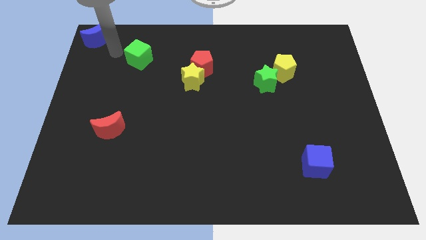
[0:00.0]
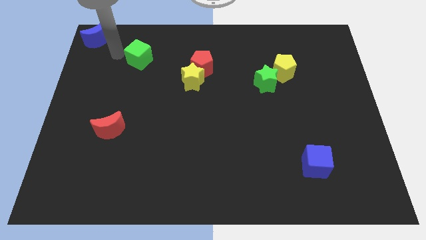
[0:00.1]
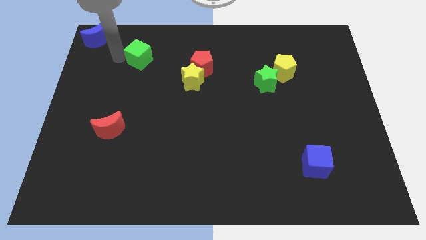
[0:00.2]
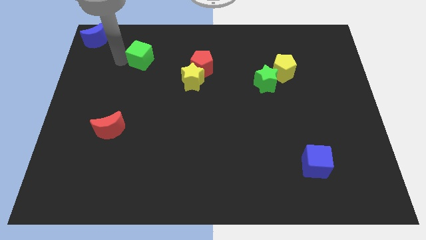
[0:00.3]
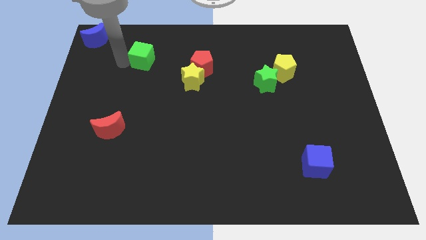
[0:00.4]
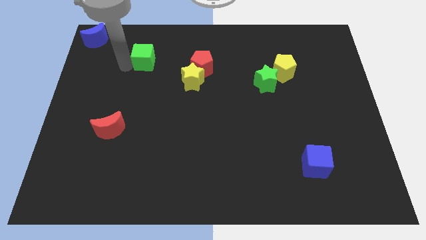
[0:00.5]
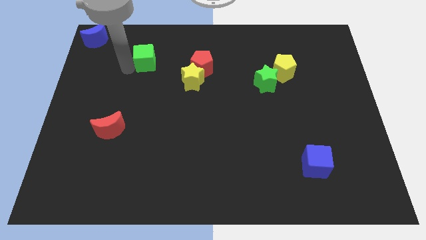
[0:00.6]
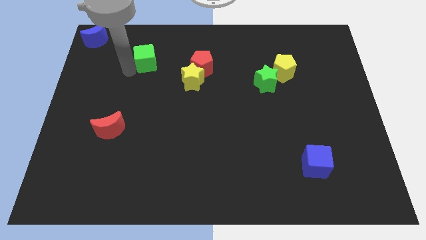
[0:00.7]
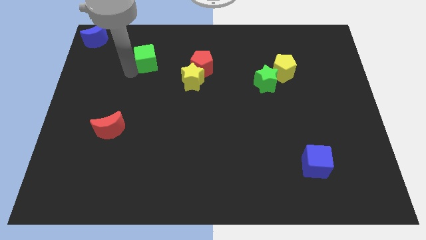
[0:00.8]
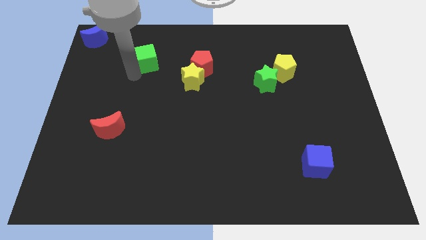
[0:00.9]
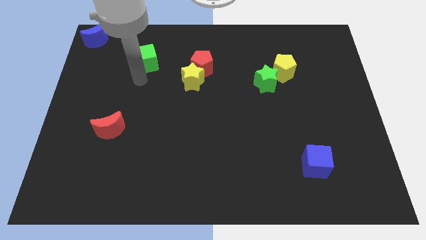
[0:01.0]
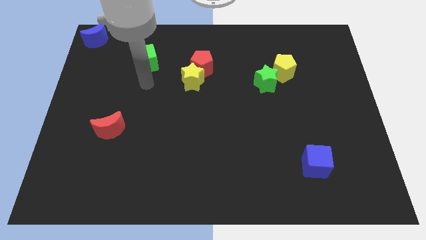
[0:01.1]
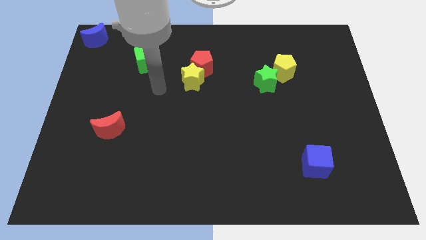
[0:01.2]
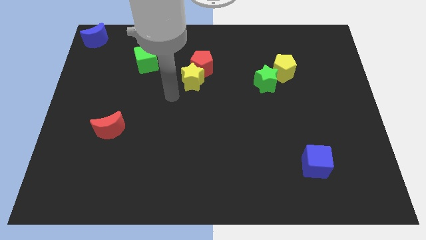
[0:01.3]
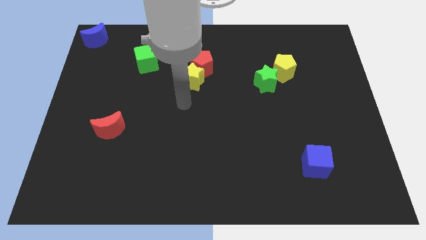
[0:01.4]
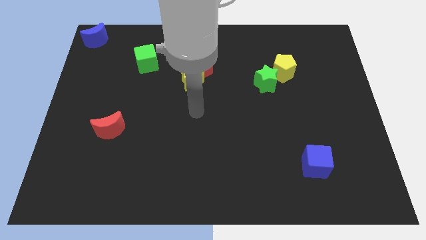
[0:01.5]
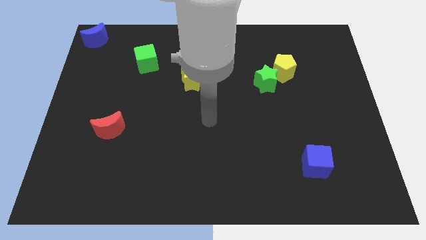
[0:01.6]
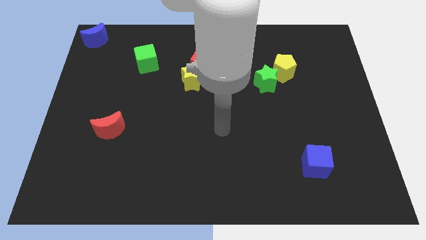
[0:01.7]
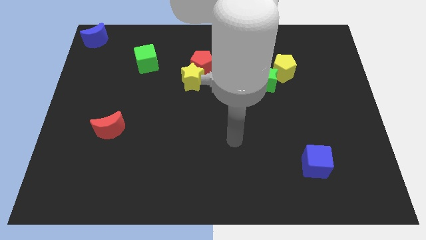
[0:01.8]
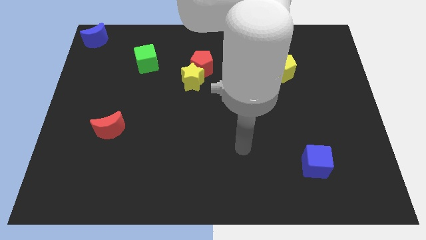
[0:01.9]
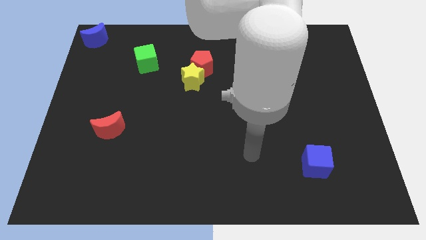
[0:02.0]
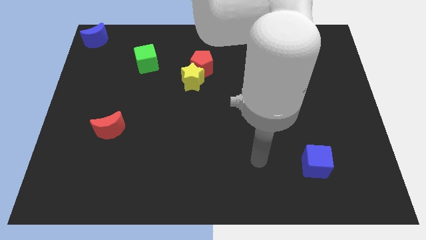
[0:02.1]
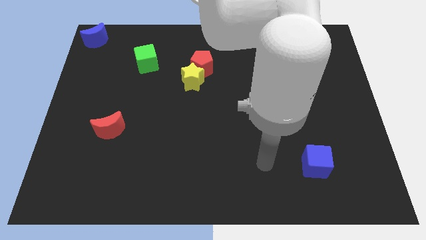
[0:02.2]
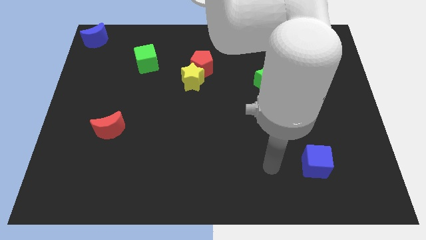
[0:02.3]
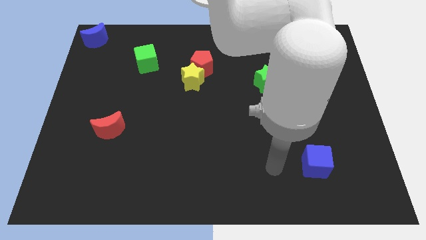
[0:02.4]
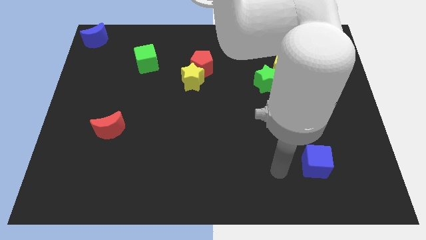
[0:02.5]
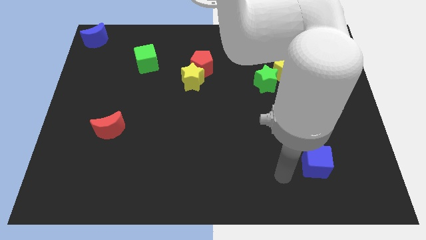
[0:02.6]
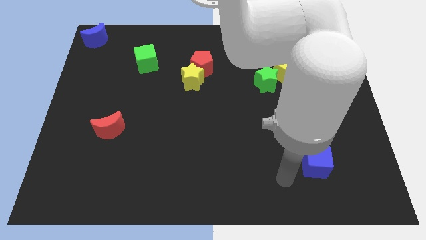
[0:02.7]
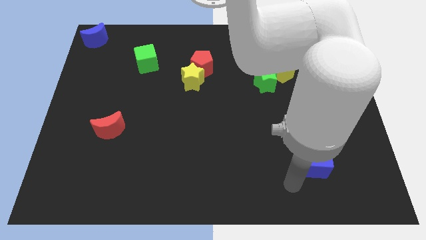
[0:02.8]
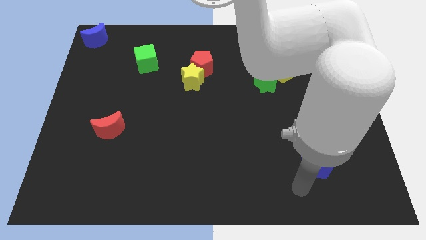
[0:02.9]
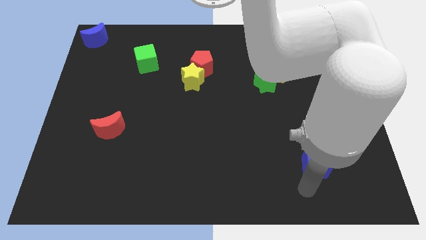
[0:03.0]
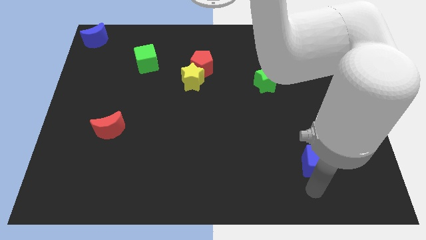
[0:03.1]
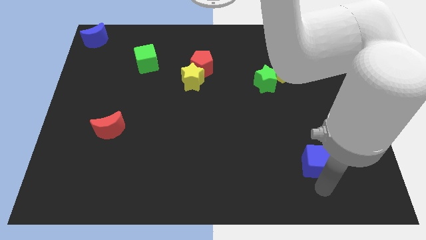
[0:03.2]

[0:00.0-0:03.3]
move the green cube slightly towards the right

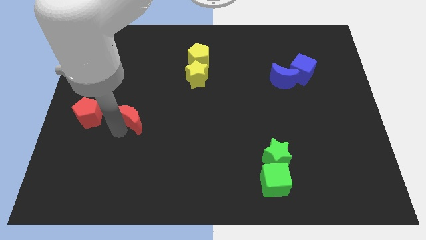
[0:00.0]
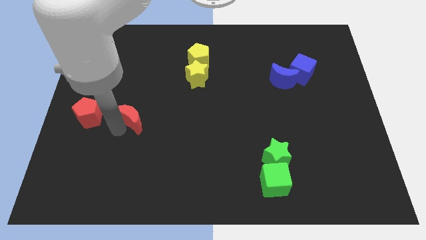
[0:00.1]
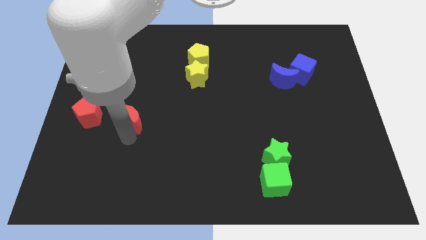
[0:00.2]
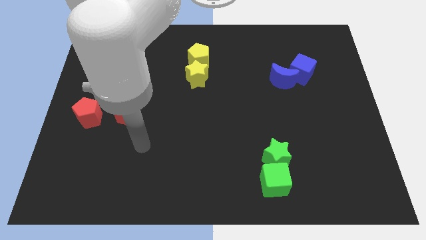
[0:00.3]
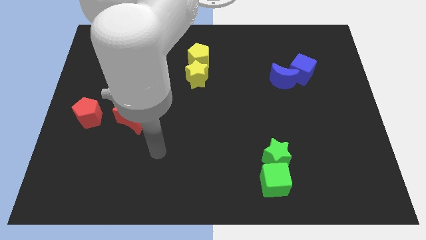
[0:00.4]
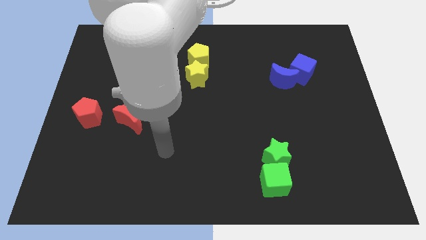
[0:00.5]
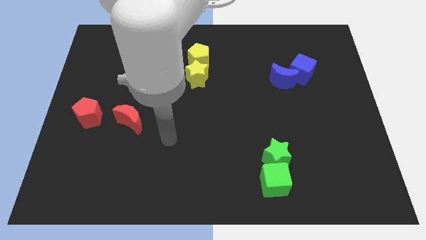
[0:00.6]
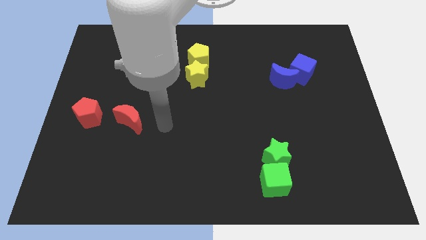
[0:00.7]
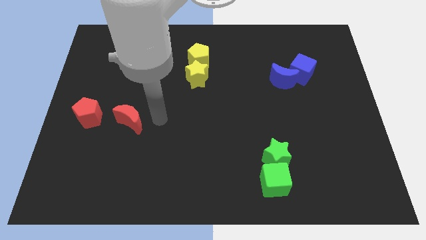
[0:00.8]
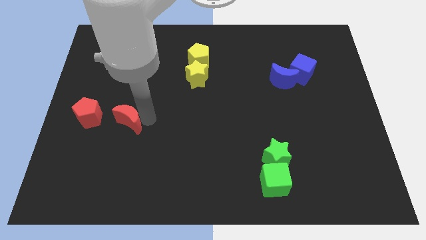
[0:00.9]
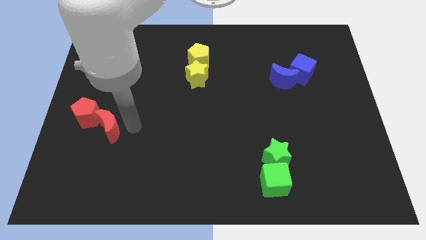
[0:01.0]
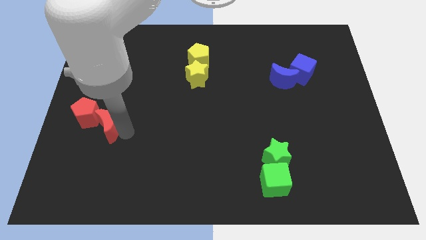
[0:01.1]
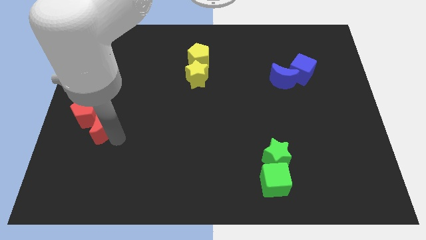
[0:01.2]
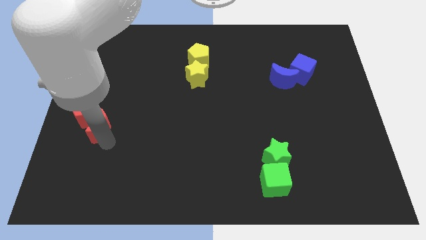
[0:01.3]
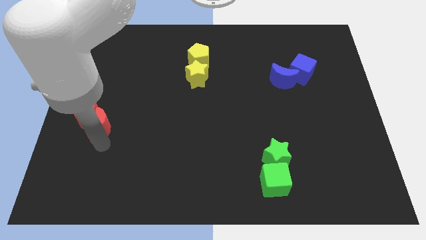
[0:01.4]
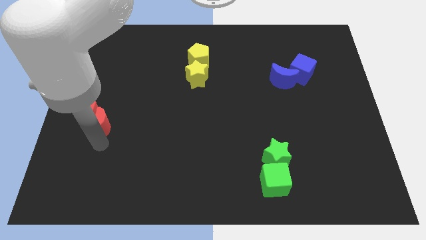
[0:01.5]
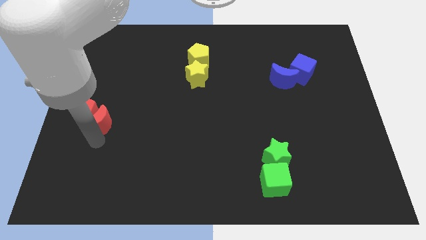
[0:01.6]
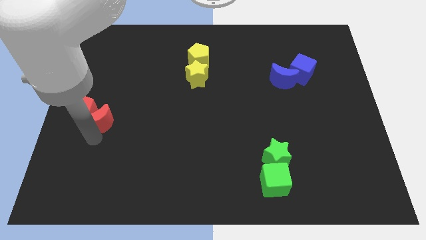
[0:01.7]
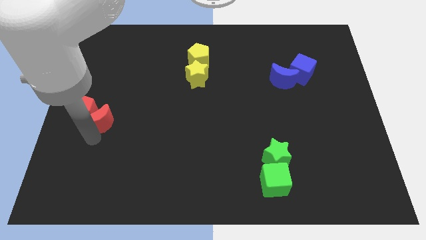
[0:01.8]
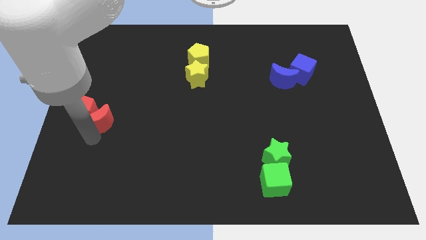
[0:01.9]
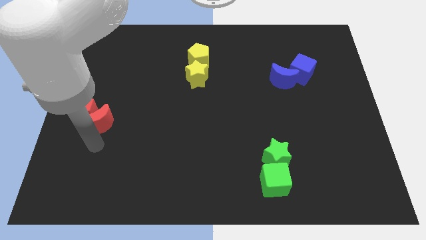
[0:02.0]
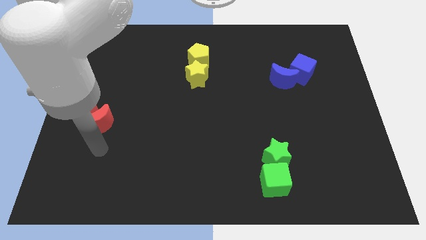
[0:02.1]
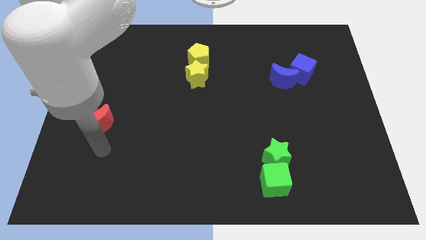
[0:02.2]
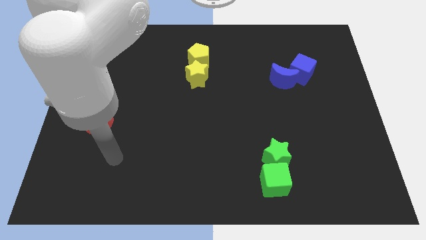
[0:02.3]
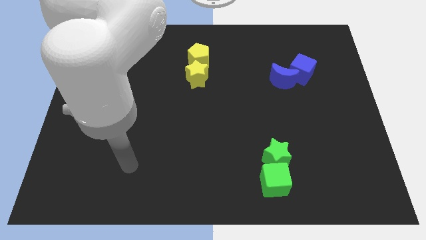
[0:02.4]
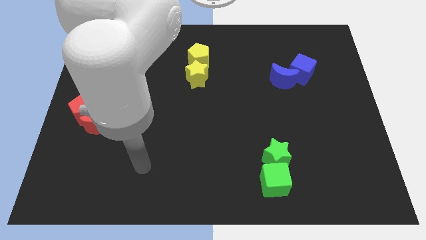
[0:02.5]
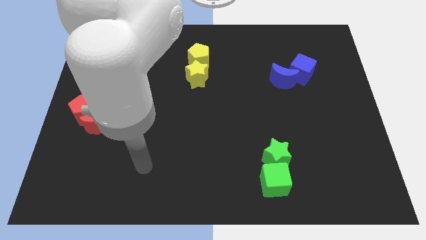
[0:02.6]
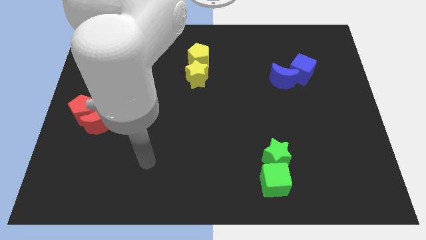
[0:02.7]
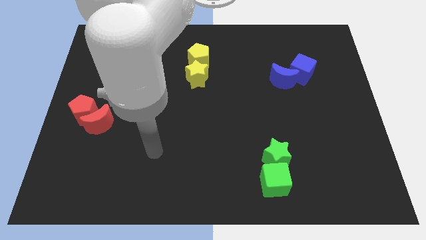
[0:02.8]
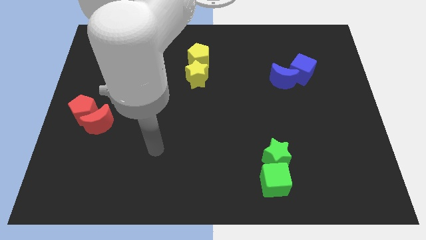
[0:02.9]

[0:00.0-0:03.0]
move the red blocks to the left center of the board

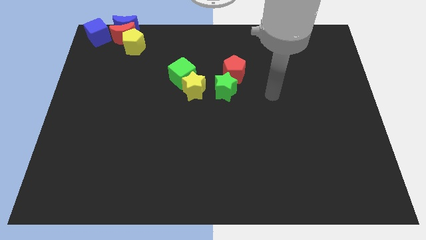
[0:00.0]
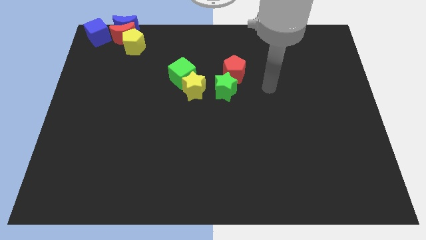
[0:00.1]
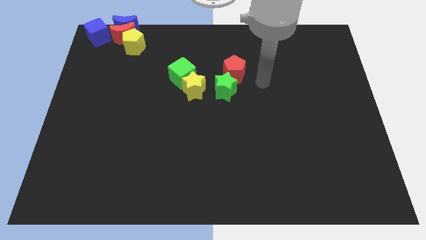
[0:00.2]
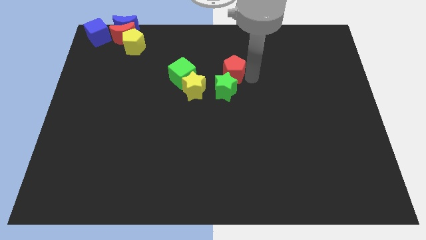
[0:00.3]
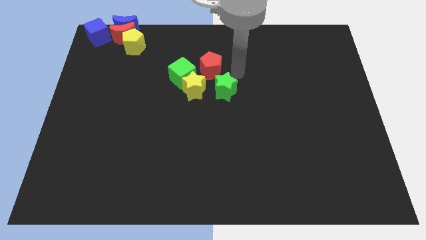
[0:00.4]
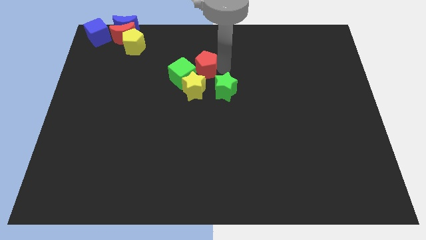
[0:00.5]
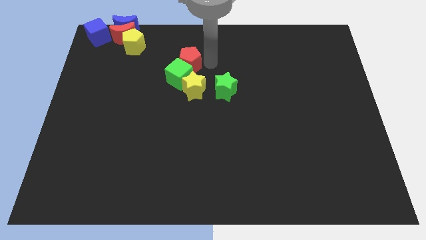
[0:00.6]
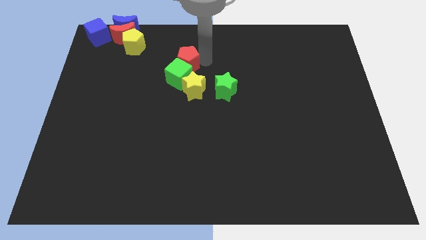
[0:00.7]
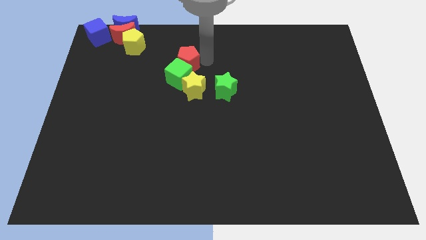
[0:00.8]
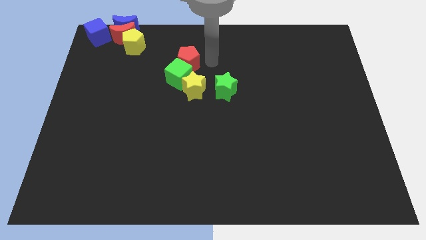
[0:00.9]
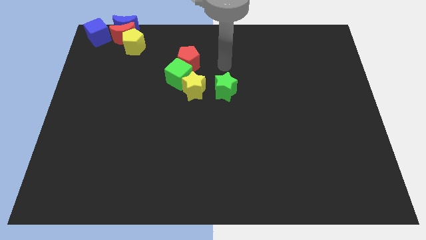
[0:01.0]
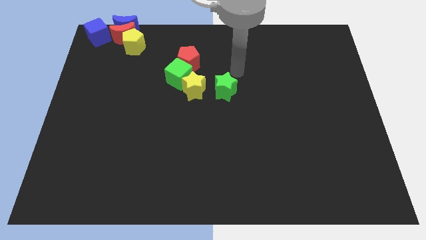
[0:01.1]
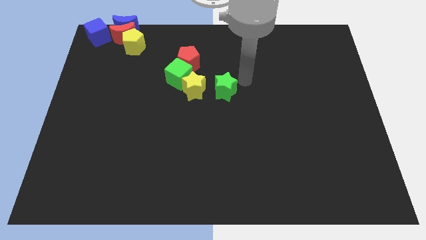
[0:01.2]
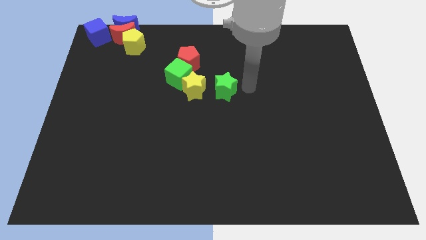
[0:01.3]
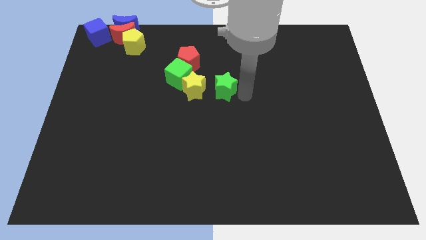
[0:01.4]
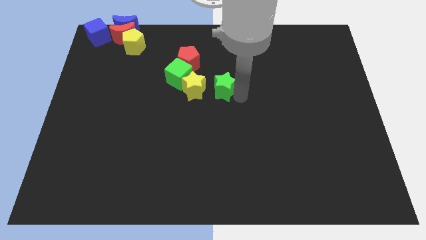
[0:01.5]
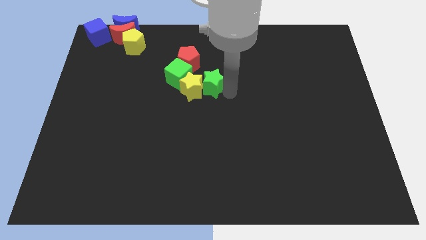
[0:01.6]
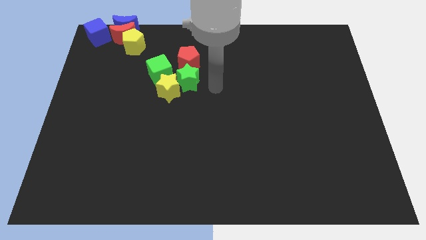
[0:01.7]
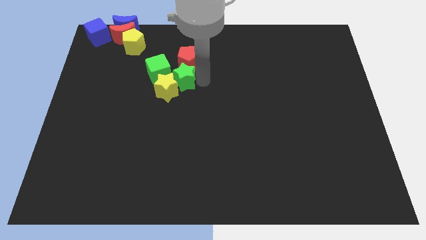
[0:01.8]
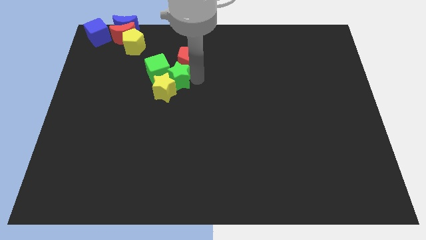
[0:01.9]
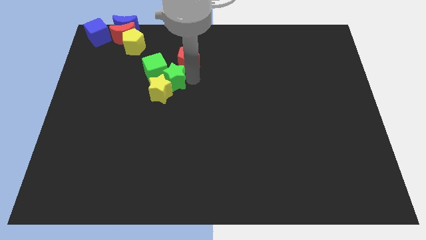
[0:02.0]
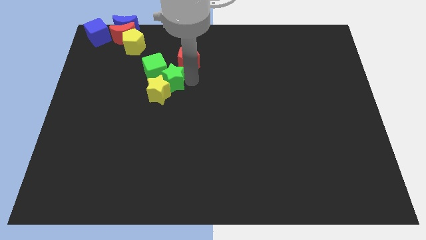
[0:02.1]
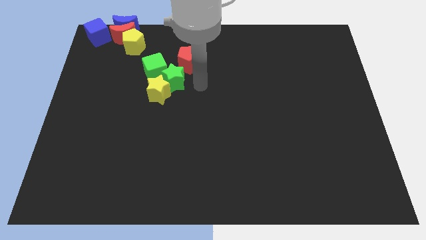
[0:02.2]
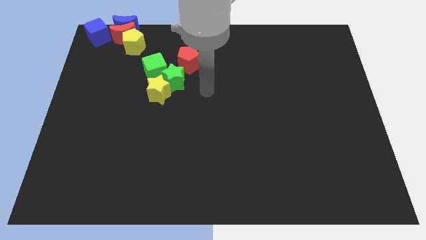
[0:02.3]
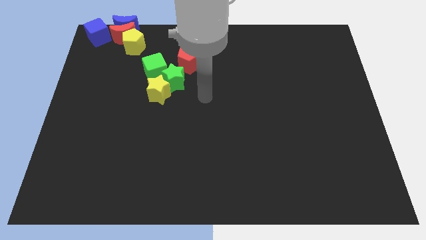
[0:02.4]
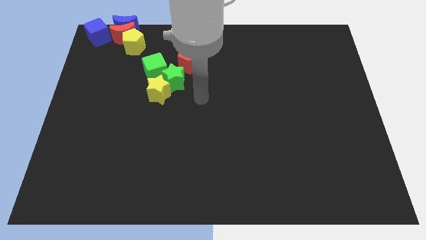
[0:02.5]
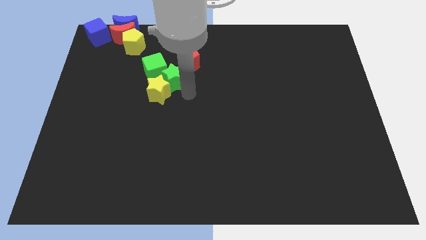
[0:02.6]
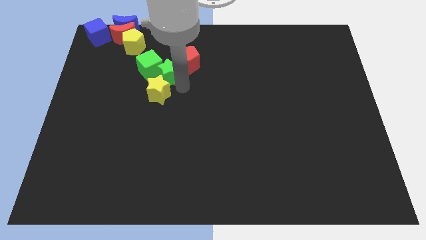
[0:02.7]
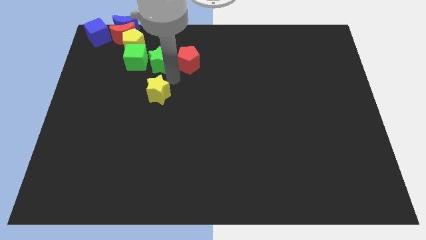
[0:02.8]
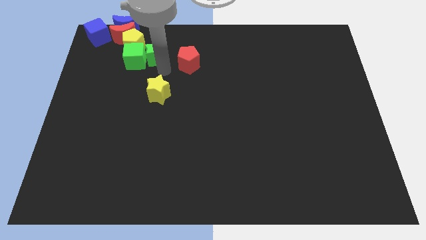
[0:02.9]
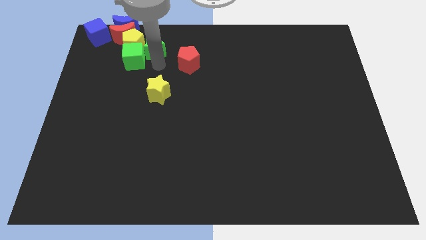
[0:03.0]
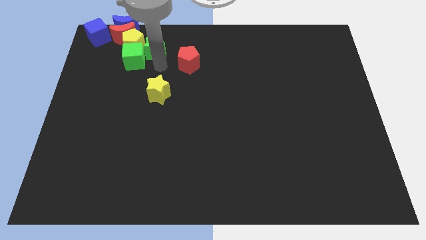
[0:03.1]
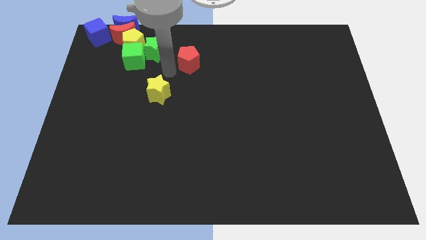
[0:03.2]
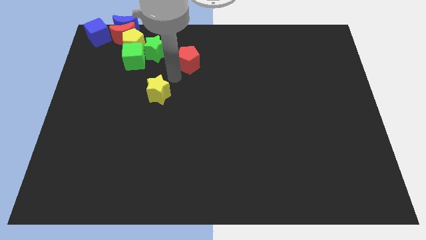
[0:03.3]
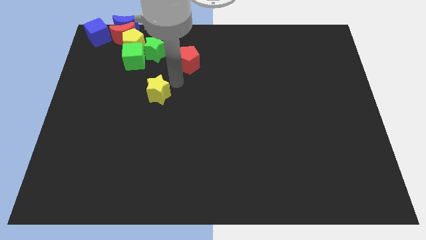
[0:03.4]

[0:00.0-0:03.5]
push the green star and green cube close to the yellow pentagon
